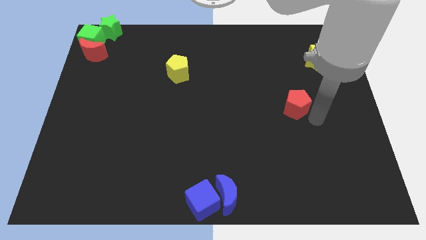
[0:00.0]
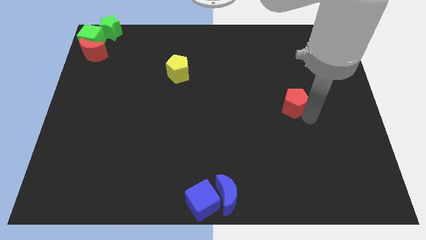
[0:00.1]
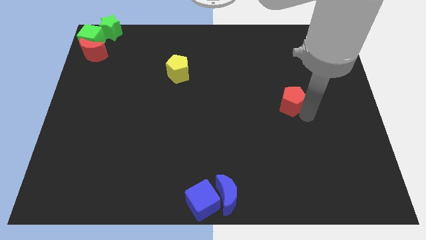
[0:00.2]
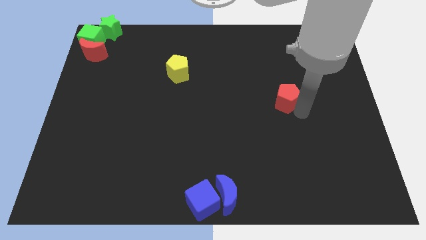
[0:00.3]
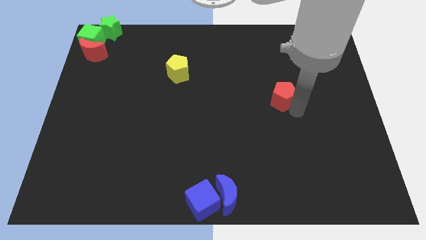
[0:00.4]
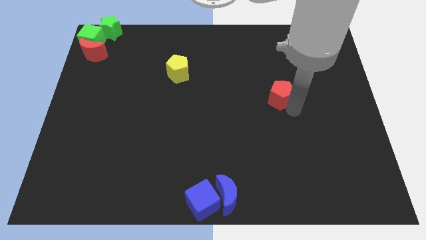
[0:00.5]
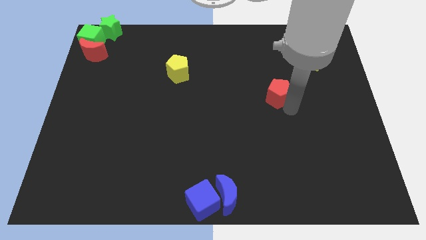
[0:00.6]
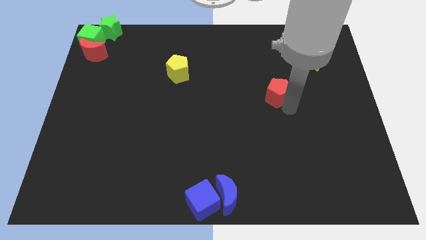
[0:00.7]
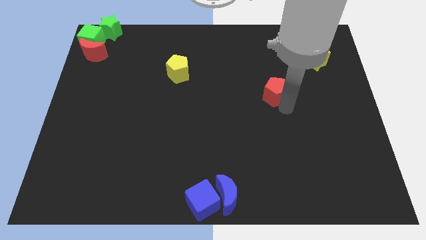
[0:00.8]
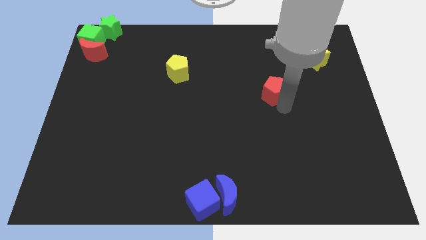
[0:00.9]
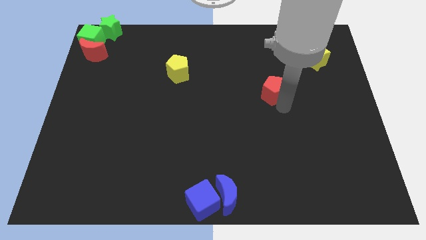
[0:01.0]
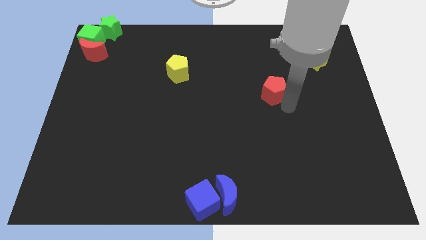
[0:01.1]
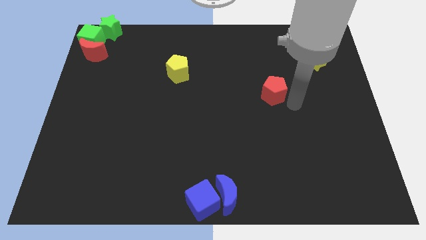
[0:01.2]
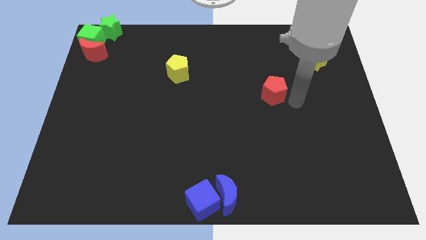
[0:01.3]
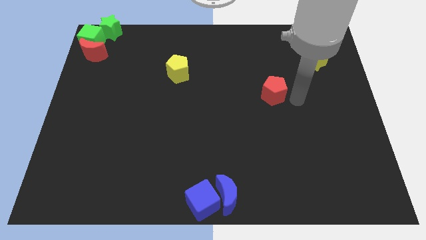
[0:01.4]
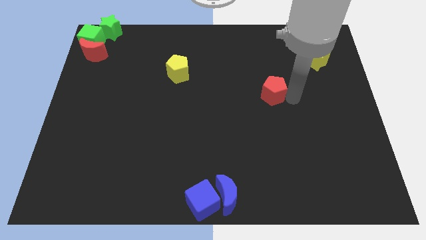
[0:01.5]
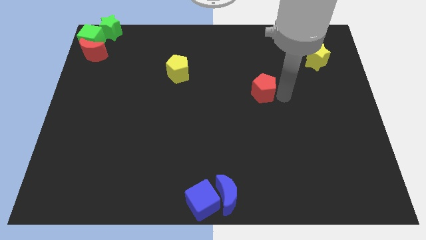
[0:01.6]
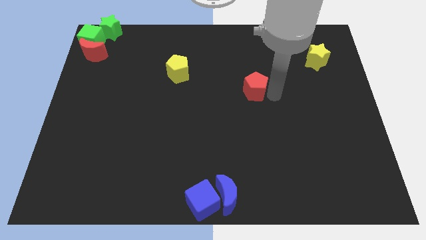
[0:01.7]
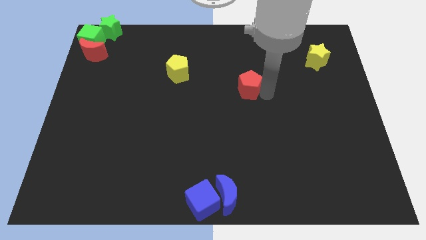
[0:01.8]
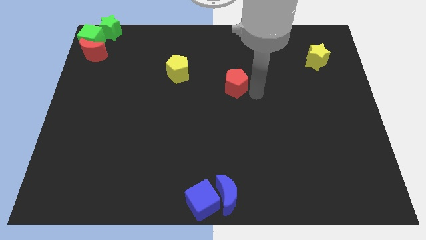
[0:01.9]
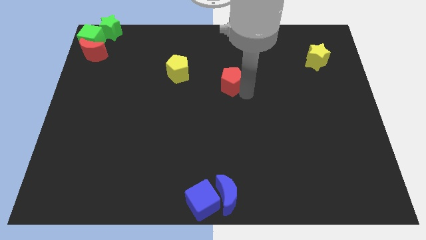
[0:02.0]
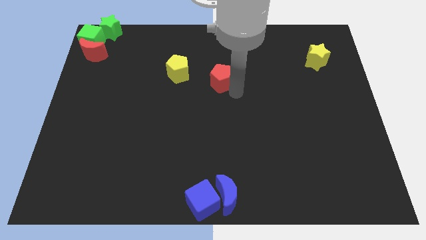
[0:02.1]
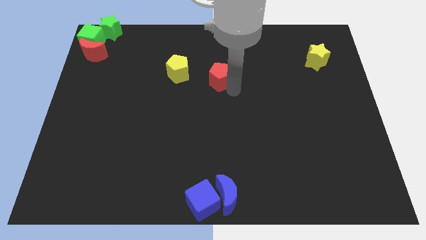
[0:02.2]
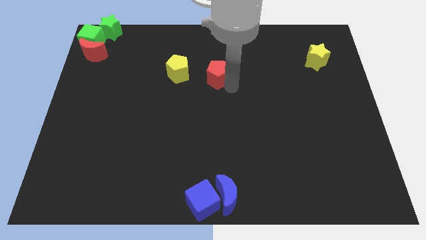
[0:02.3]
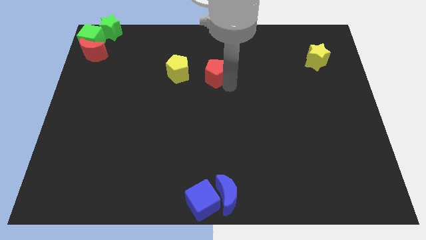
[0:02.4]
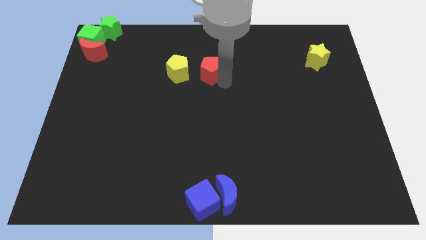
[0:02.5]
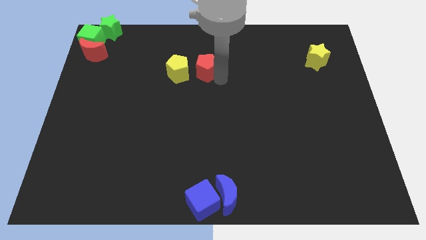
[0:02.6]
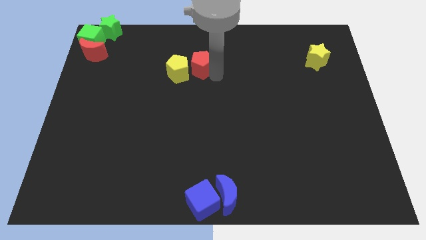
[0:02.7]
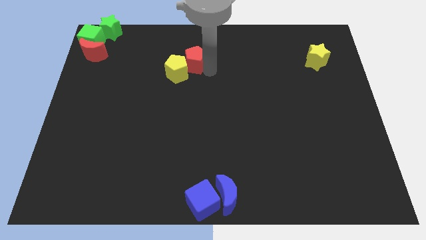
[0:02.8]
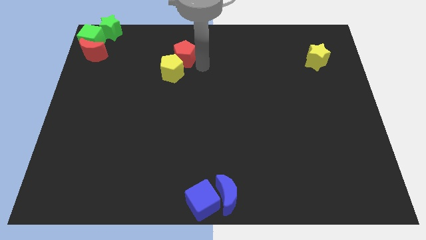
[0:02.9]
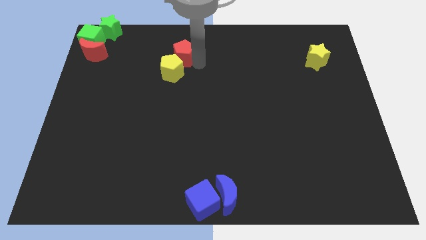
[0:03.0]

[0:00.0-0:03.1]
push the red pentagon above the yellow pentagon

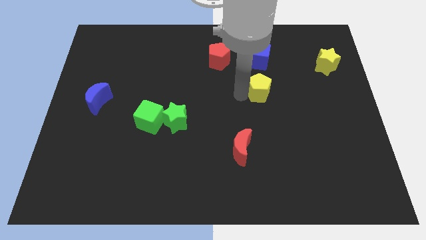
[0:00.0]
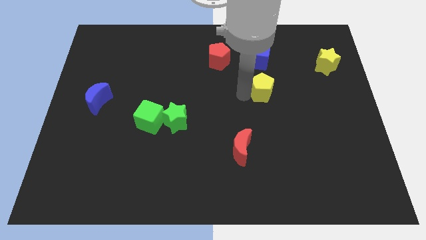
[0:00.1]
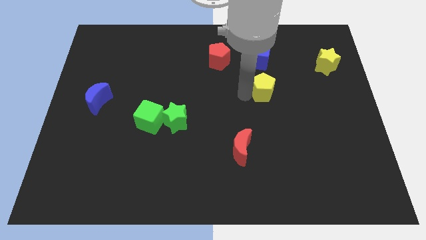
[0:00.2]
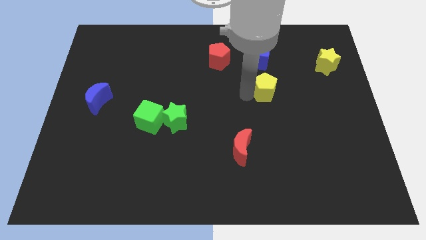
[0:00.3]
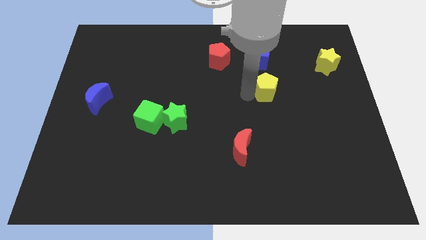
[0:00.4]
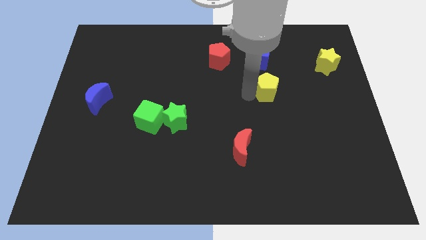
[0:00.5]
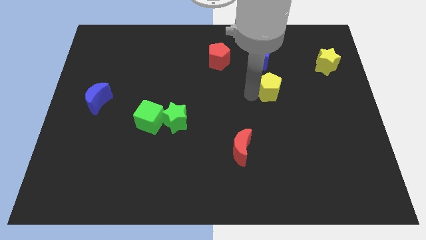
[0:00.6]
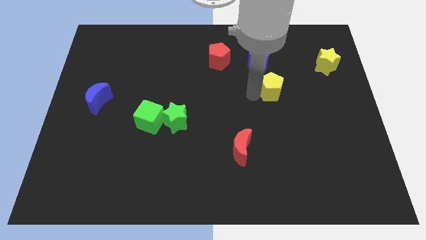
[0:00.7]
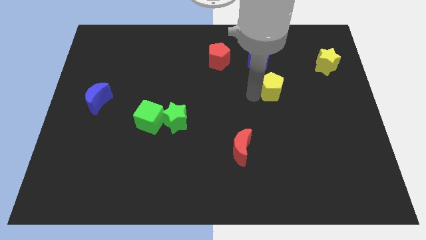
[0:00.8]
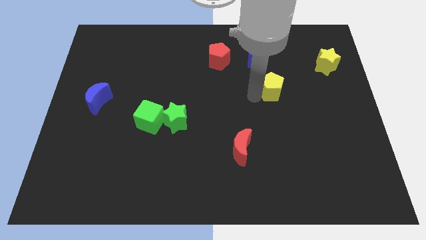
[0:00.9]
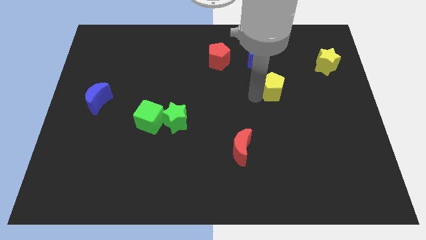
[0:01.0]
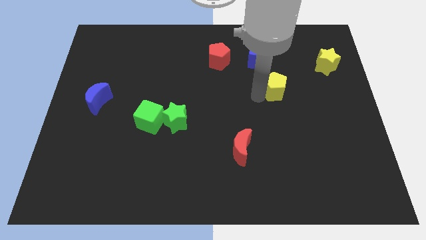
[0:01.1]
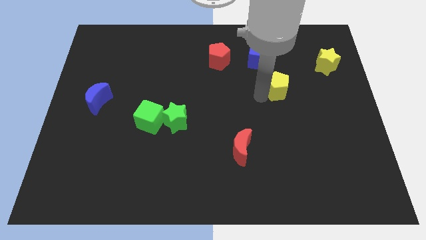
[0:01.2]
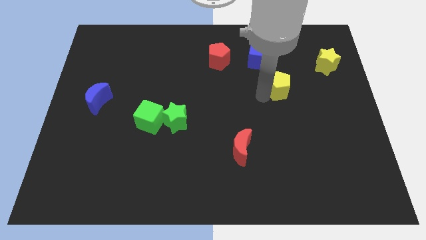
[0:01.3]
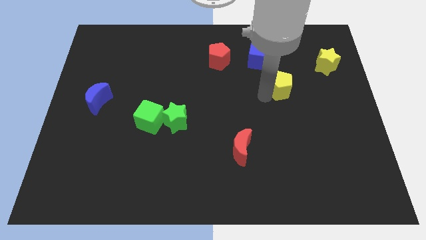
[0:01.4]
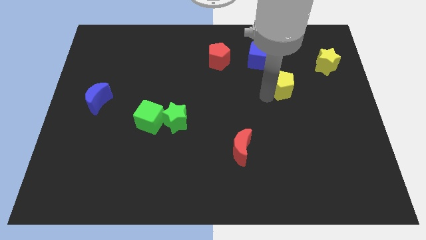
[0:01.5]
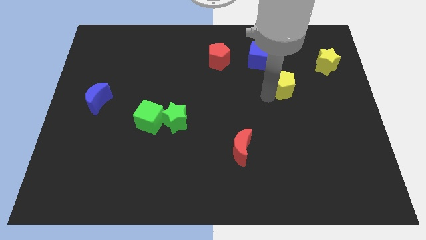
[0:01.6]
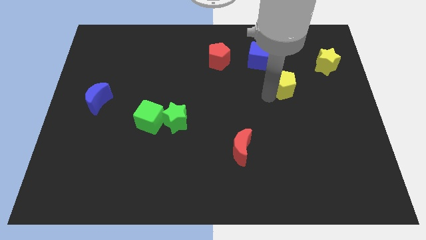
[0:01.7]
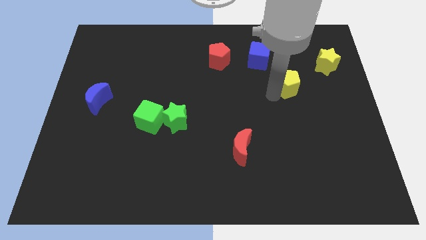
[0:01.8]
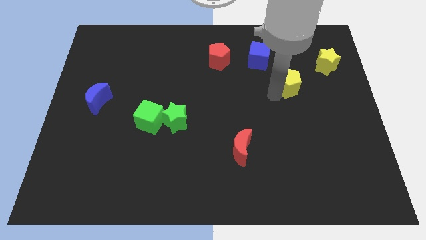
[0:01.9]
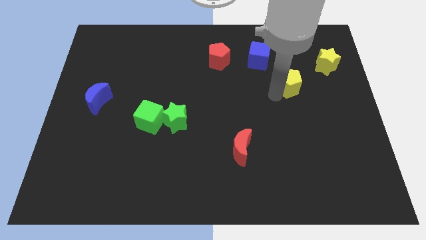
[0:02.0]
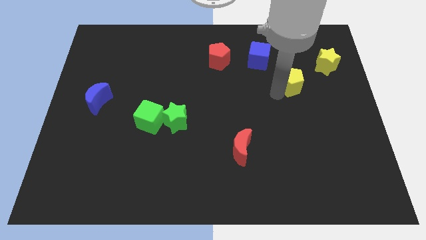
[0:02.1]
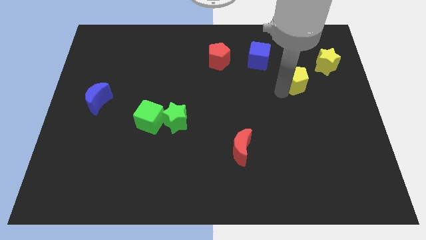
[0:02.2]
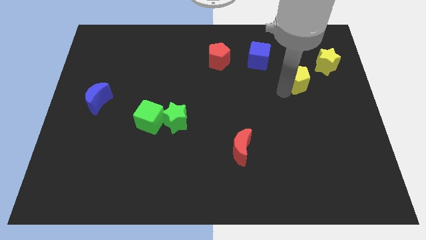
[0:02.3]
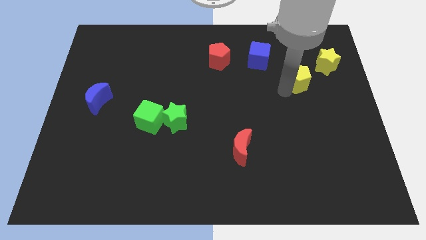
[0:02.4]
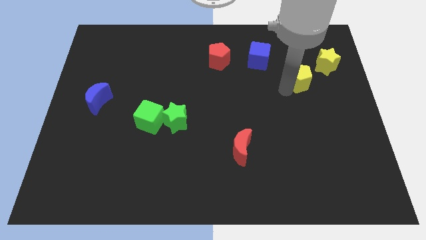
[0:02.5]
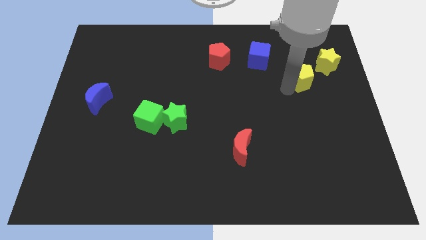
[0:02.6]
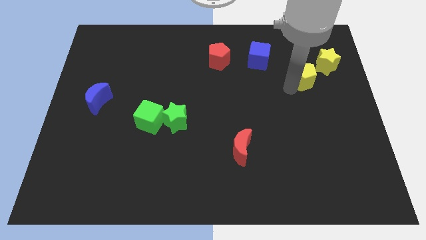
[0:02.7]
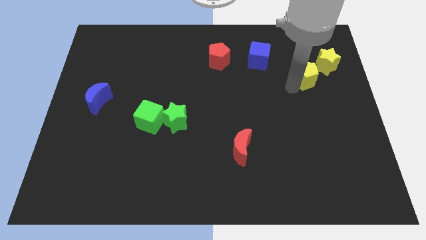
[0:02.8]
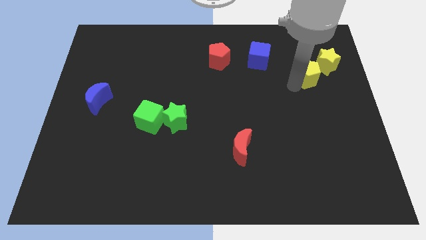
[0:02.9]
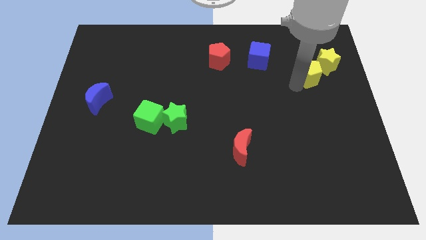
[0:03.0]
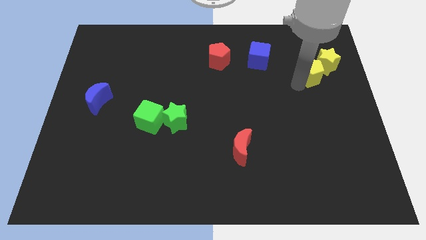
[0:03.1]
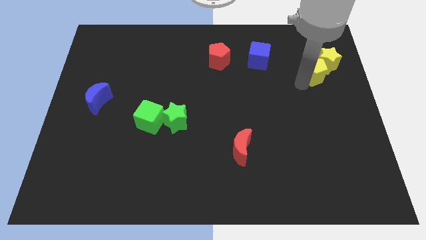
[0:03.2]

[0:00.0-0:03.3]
group up the yellow color blocks together at the right of the blue cube

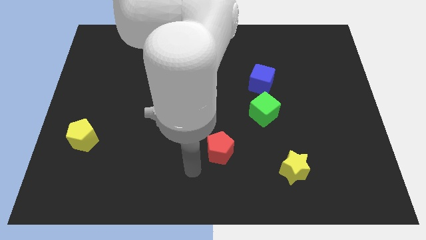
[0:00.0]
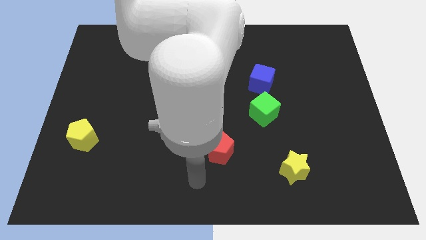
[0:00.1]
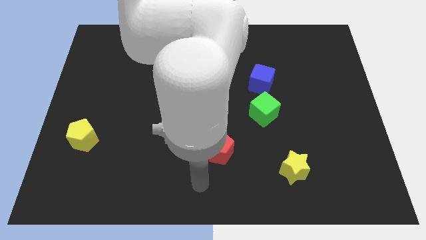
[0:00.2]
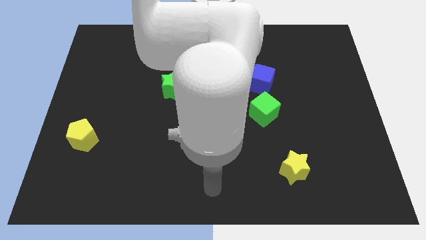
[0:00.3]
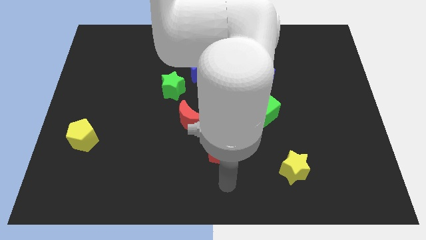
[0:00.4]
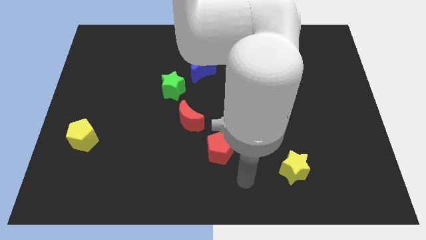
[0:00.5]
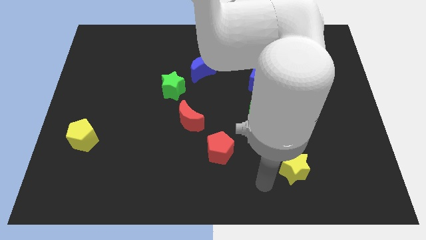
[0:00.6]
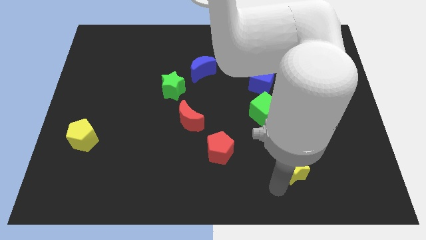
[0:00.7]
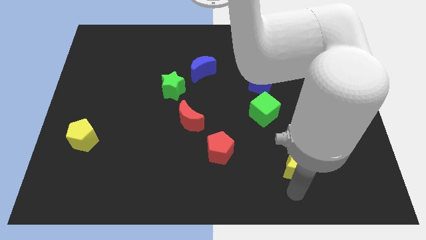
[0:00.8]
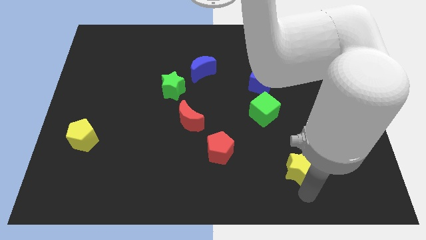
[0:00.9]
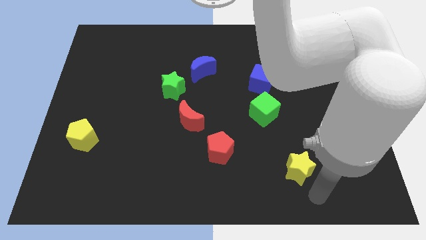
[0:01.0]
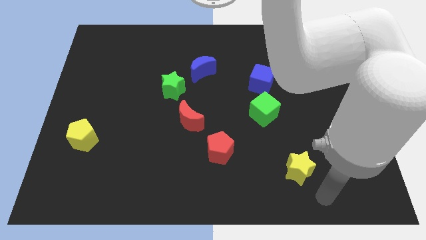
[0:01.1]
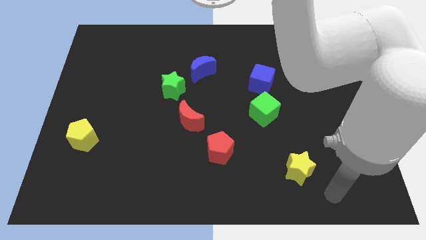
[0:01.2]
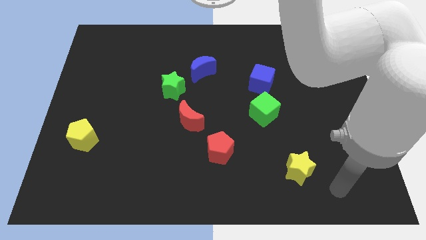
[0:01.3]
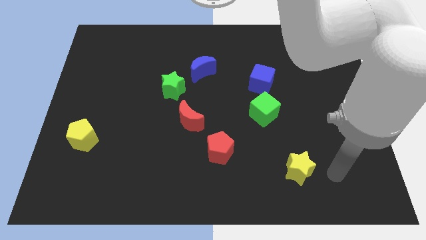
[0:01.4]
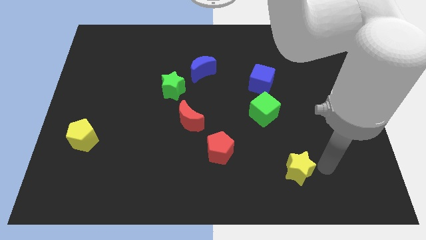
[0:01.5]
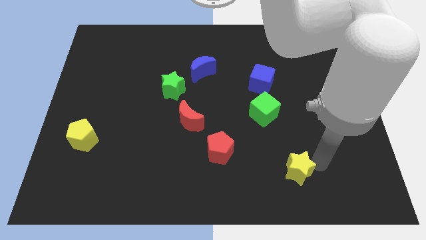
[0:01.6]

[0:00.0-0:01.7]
move your arm towards the yellow star

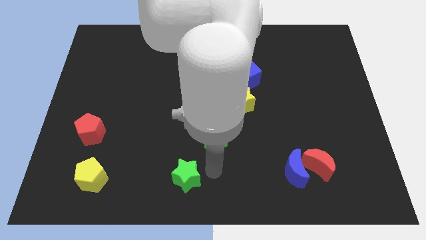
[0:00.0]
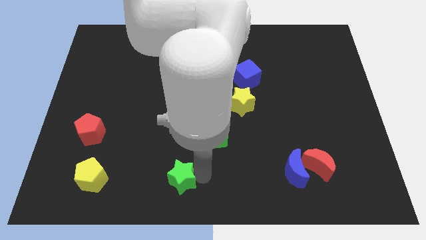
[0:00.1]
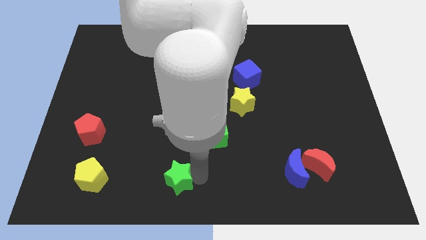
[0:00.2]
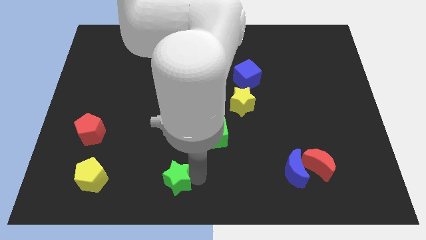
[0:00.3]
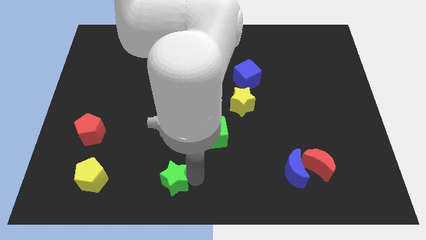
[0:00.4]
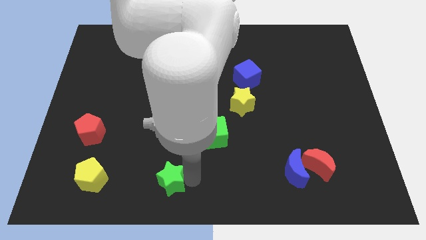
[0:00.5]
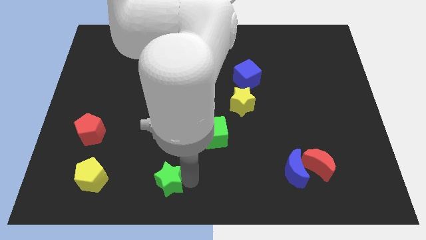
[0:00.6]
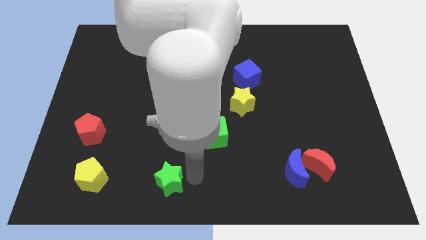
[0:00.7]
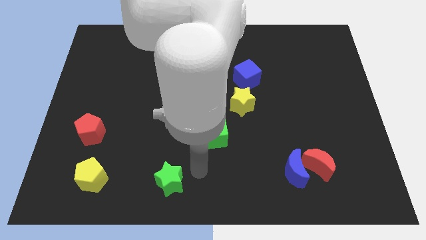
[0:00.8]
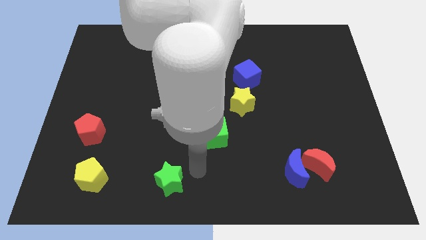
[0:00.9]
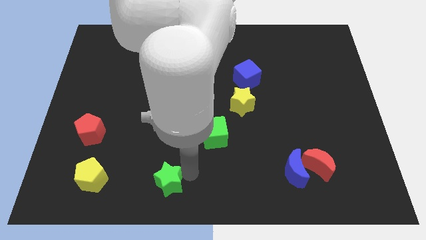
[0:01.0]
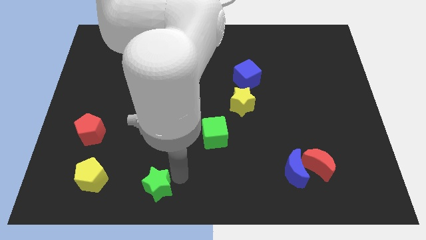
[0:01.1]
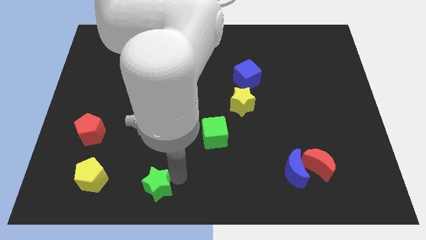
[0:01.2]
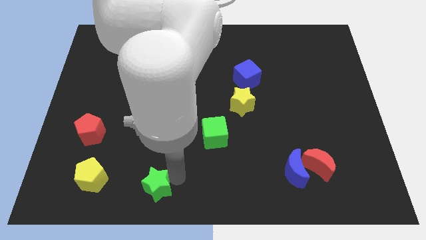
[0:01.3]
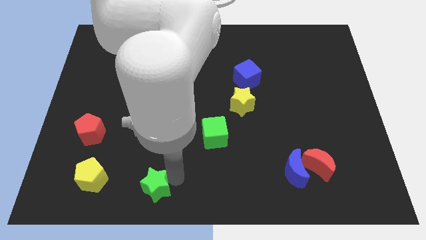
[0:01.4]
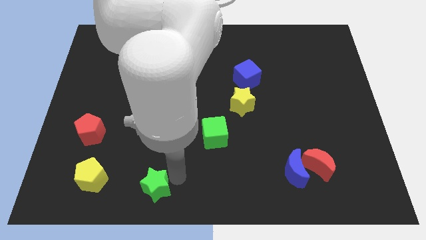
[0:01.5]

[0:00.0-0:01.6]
push the green star toward the top of the left center of the board
